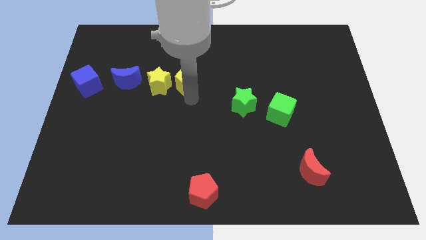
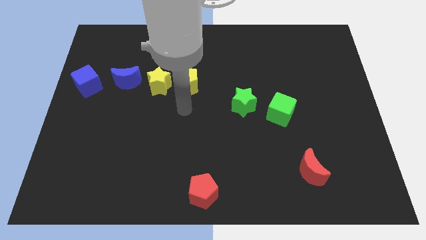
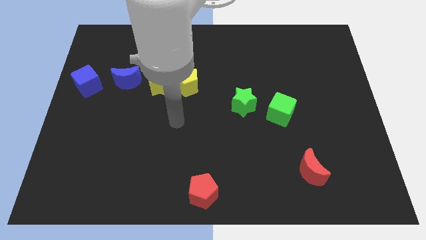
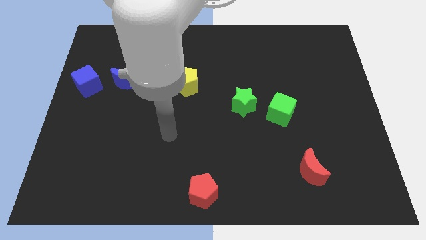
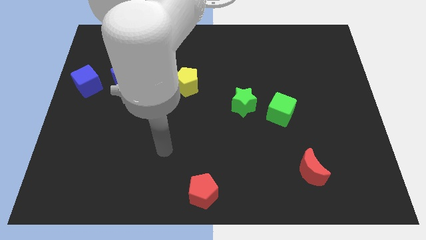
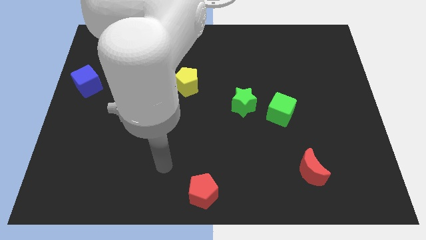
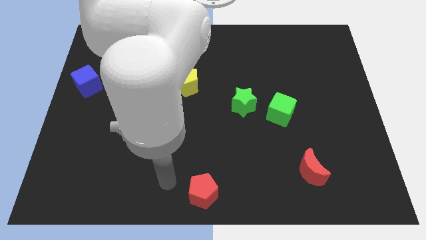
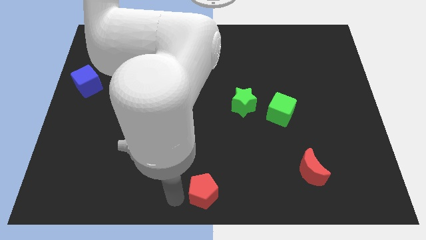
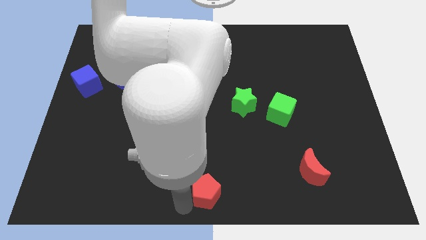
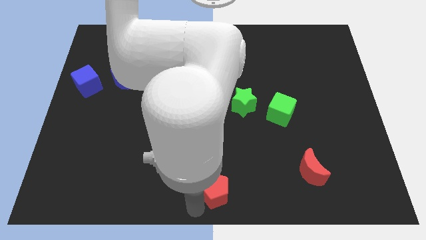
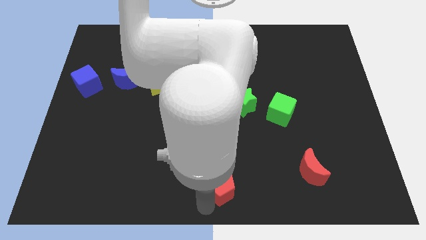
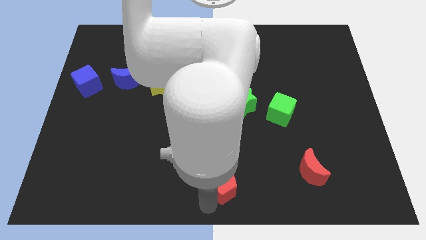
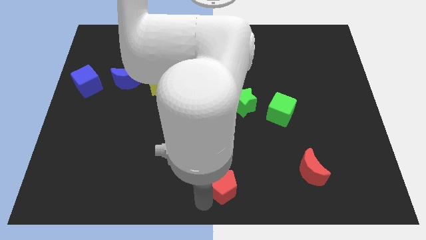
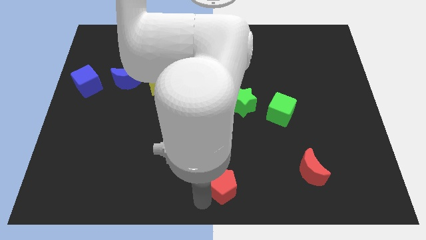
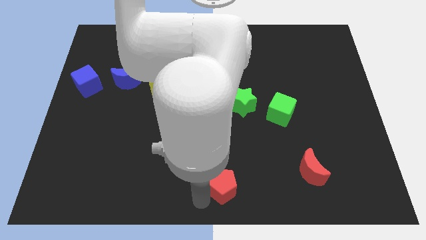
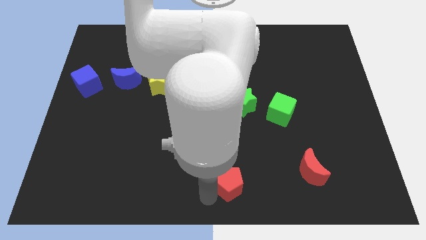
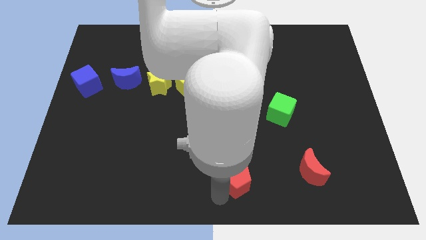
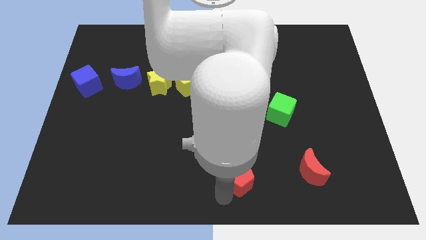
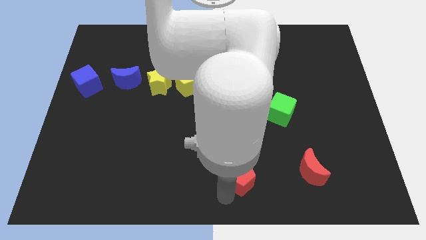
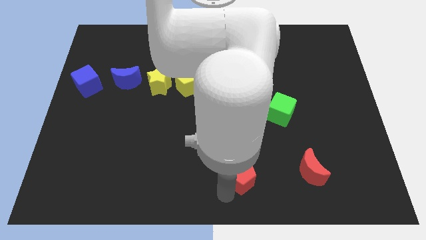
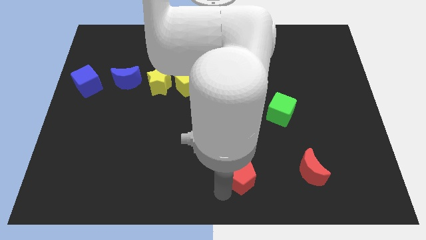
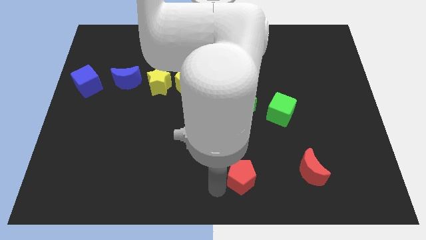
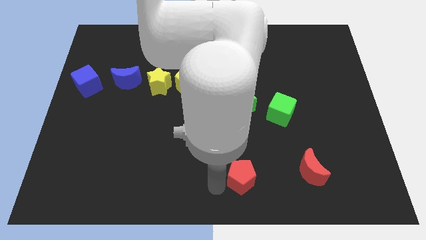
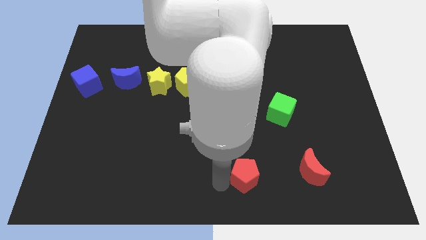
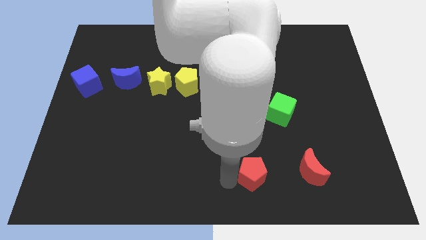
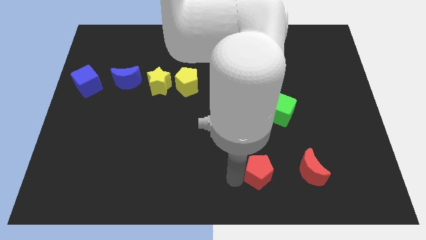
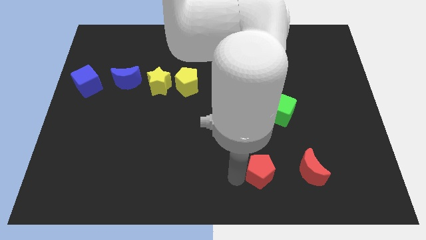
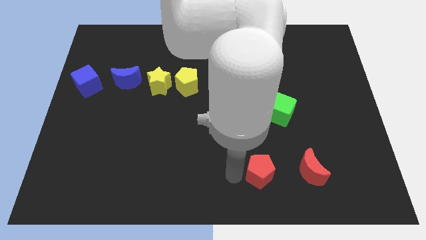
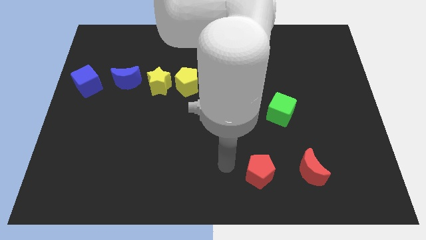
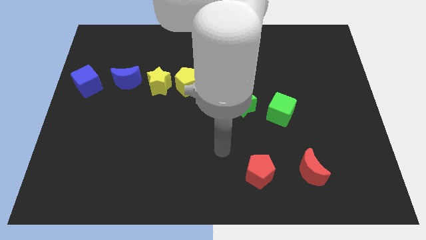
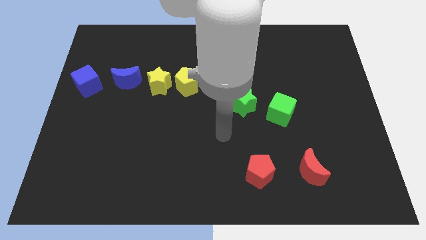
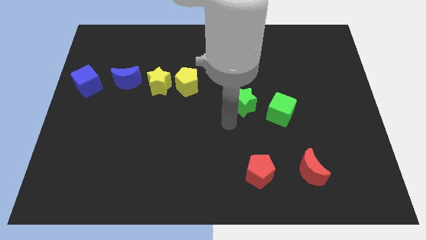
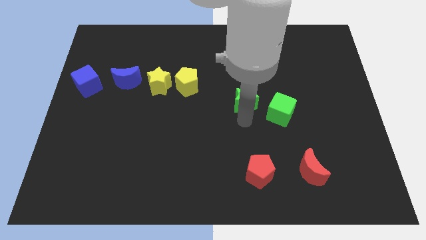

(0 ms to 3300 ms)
push the red pentagon to the left side of red crescent

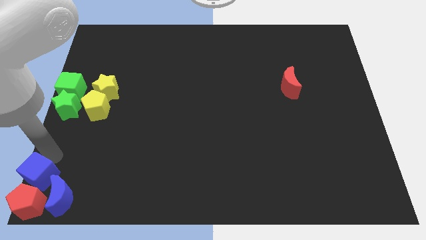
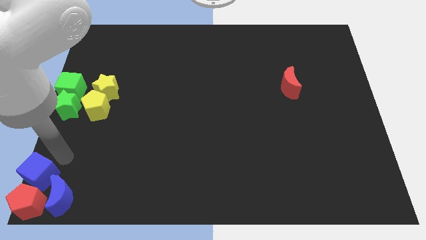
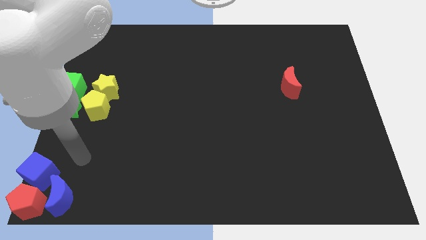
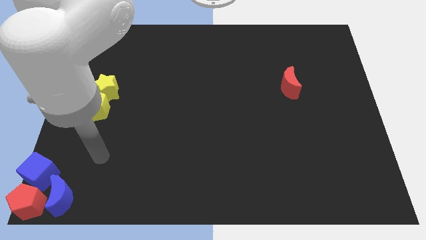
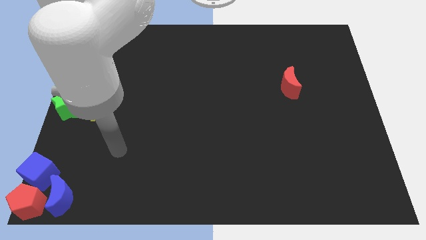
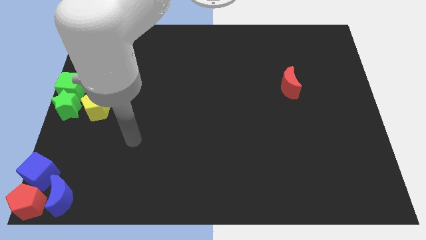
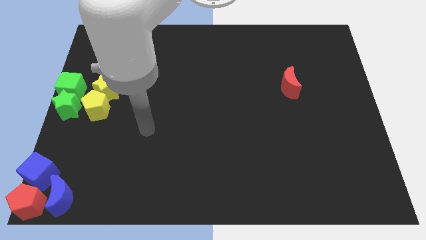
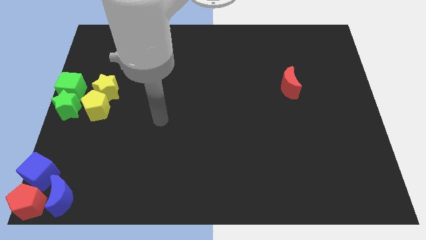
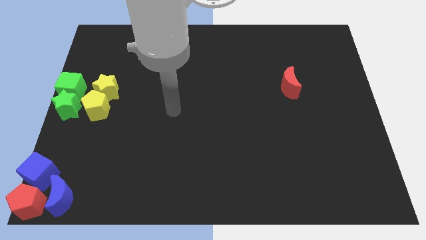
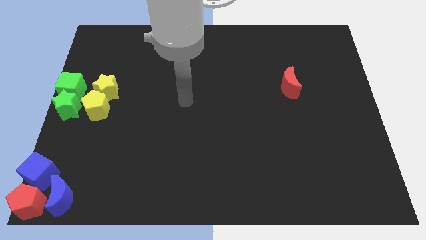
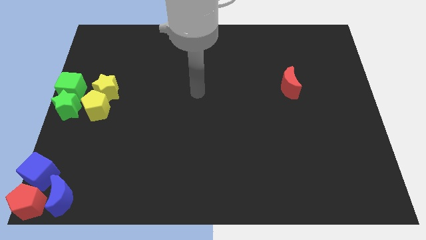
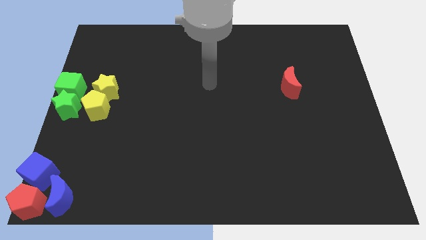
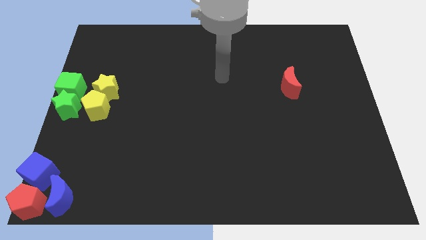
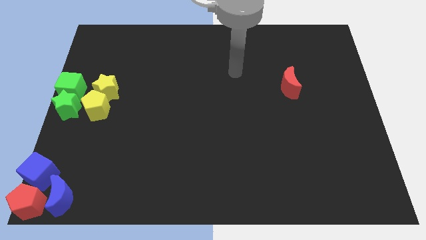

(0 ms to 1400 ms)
move your arm away from blue cube

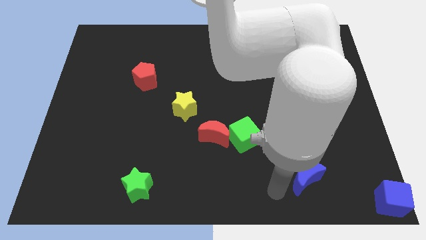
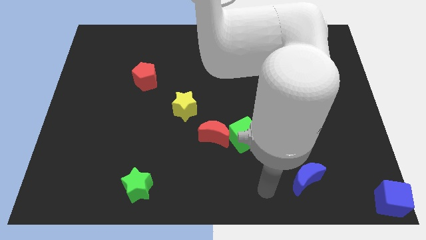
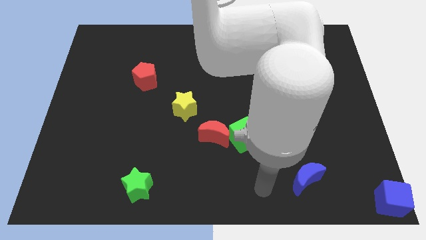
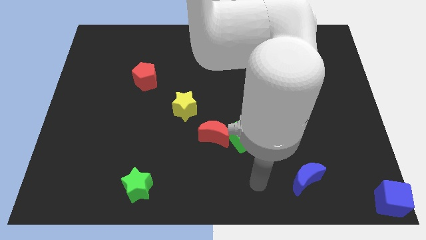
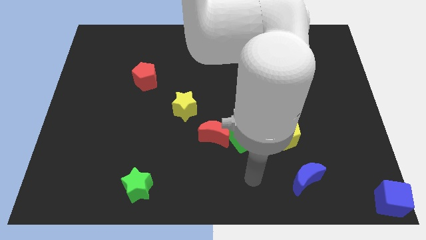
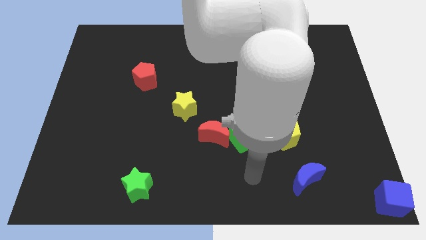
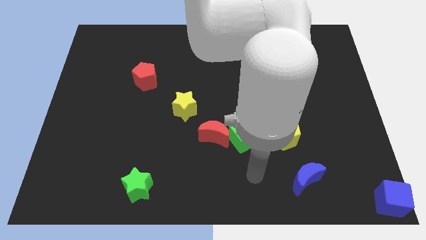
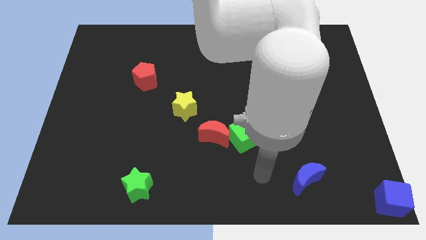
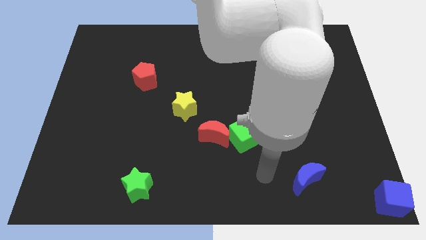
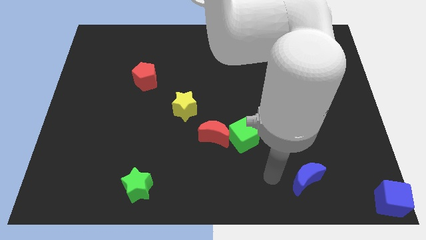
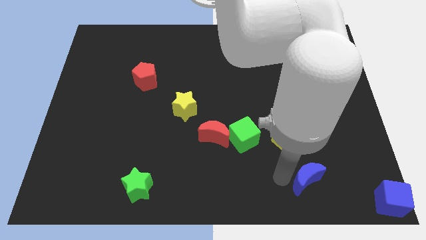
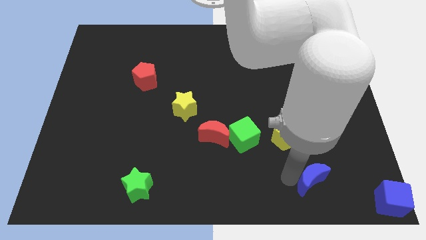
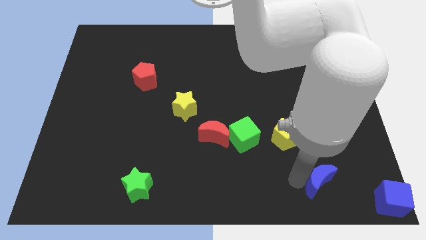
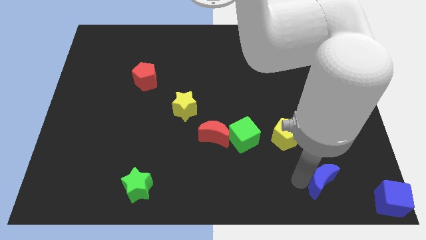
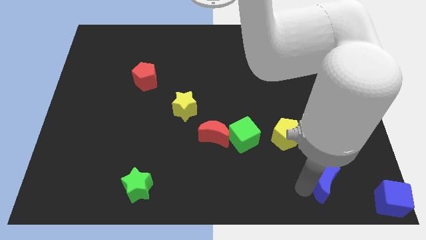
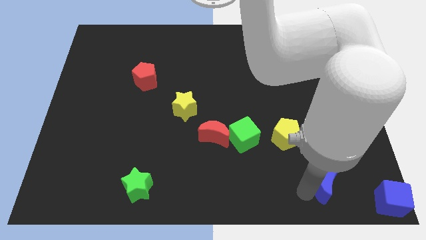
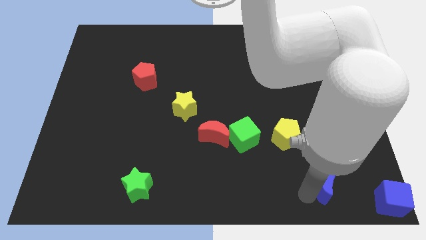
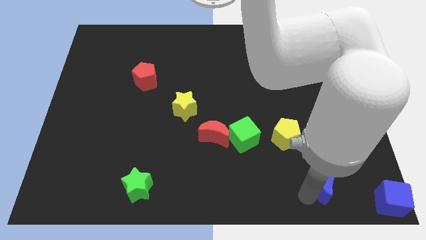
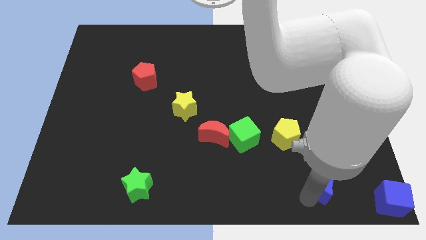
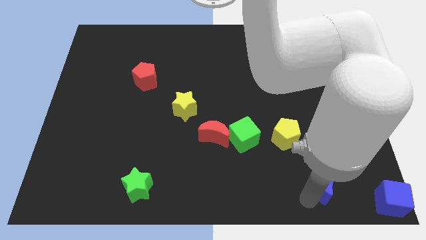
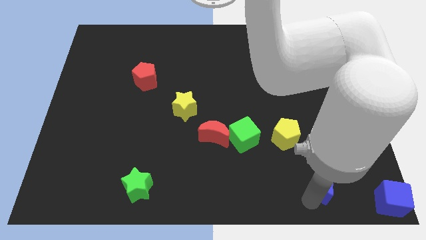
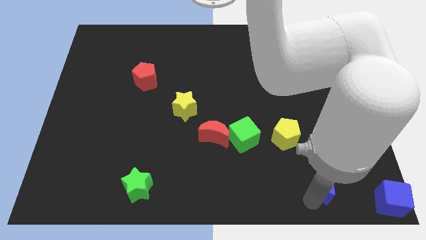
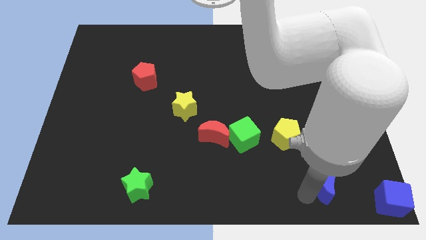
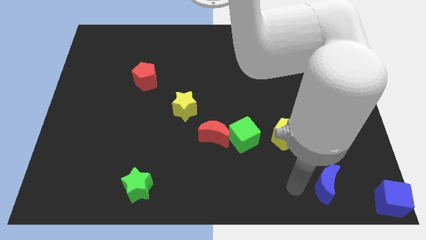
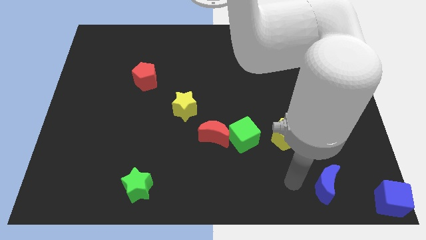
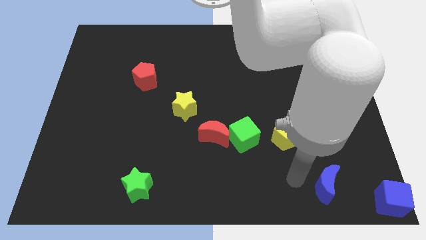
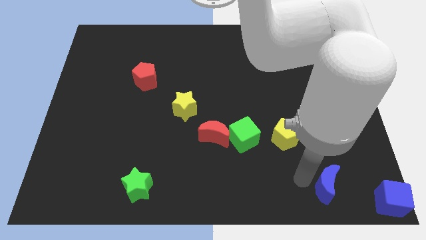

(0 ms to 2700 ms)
move the blue moon slightly to the bottom right

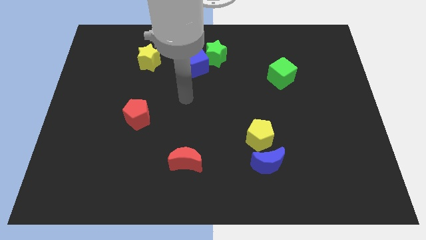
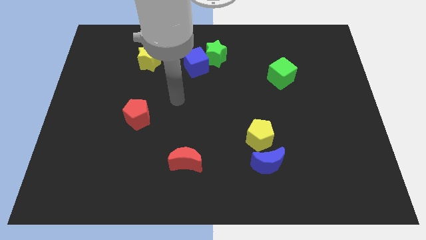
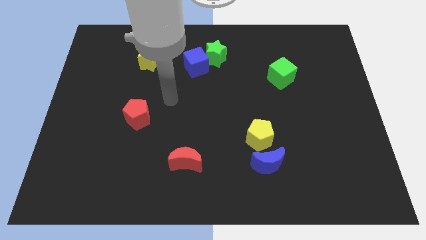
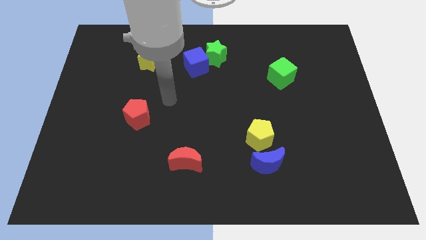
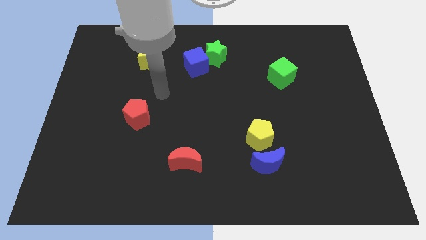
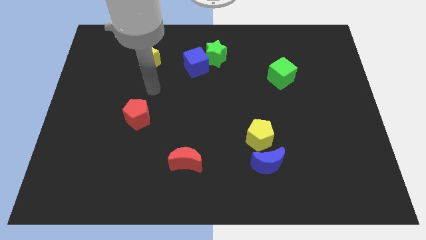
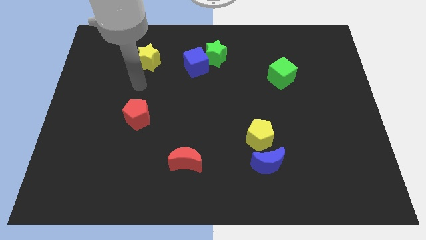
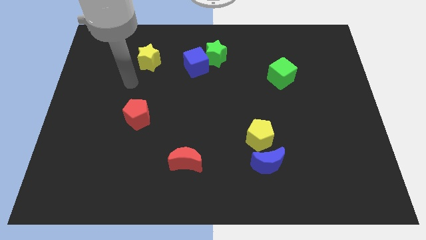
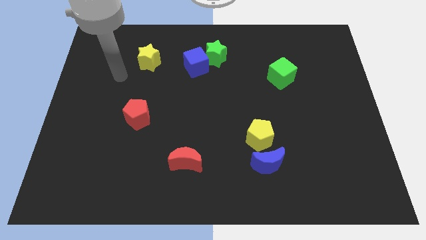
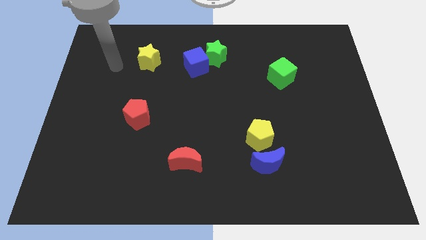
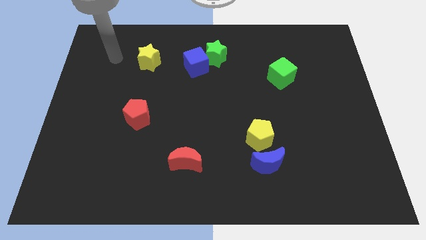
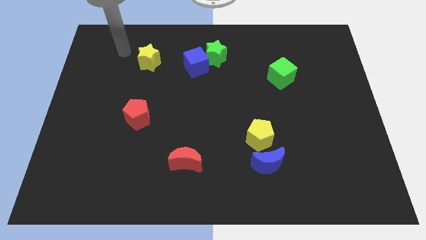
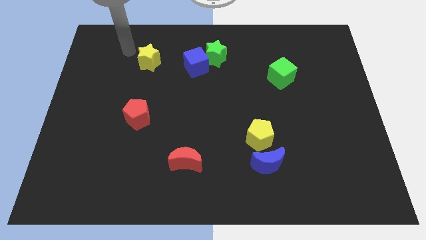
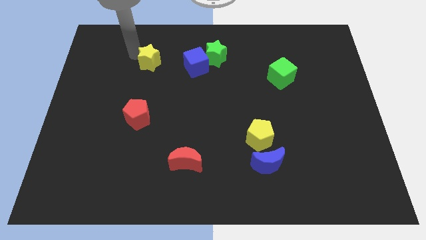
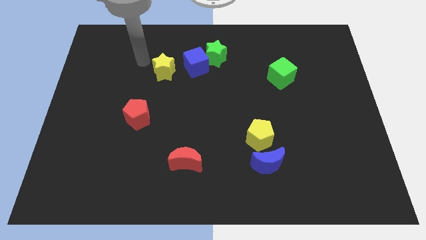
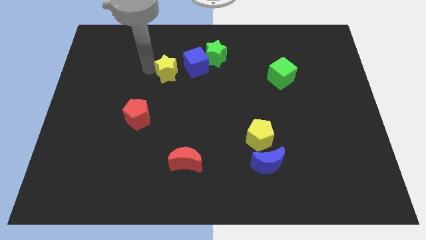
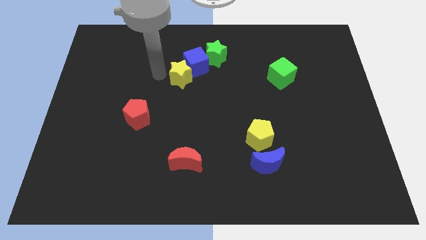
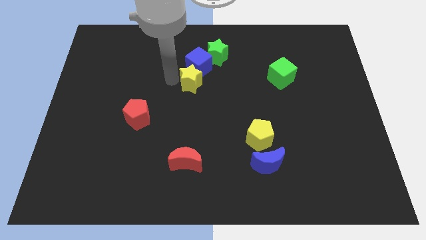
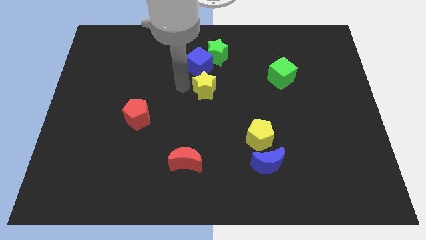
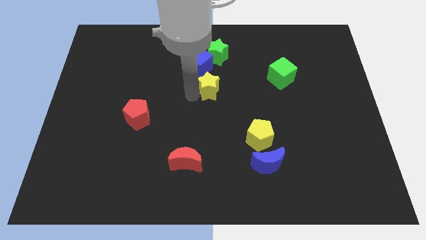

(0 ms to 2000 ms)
put the yellow star below the blue cube
